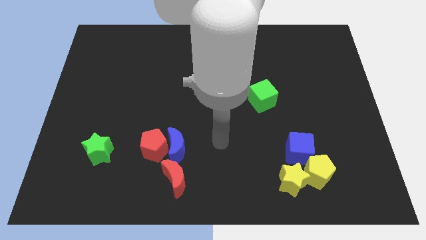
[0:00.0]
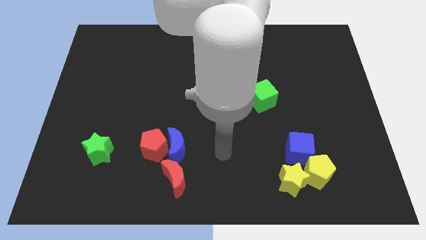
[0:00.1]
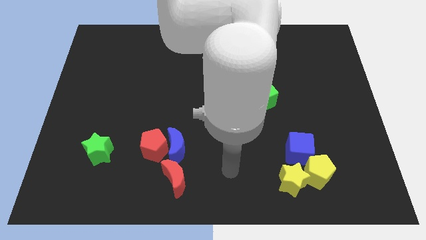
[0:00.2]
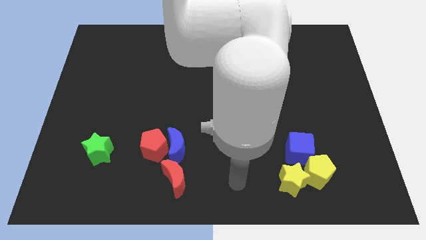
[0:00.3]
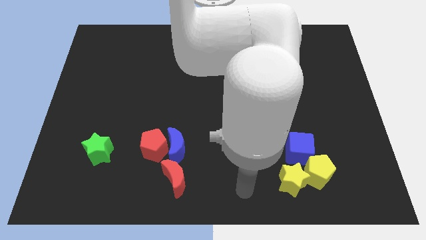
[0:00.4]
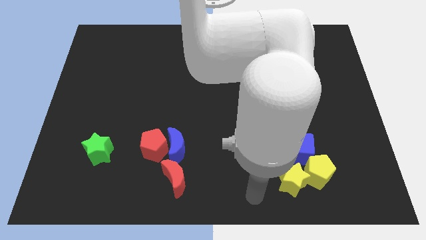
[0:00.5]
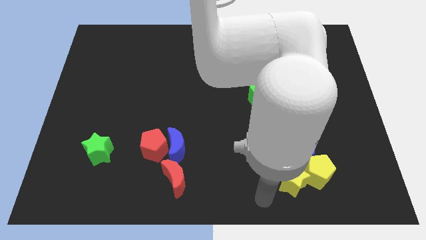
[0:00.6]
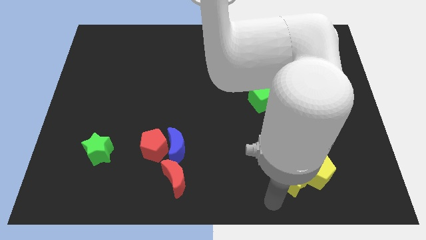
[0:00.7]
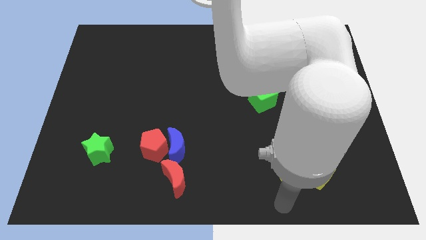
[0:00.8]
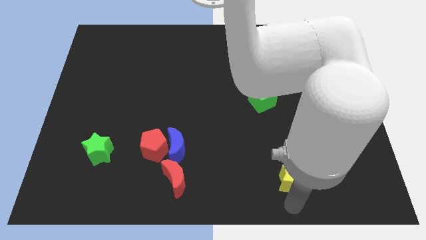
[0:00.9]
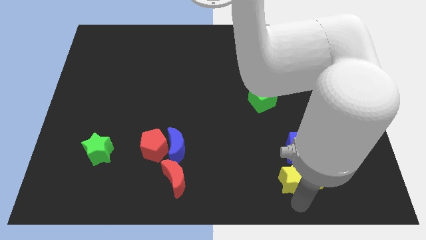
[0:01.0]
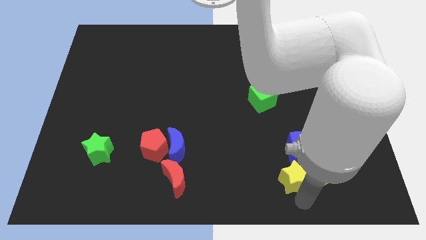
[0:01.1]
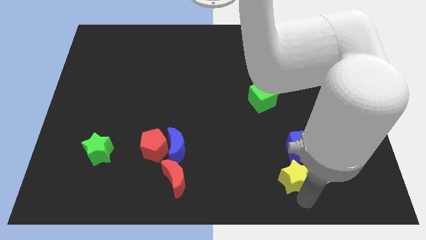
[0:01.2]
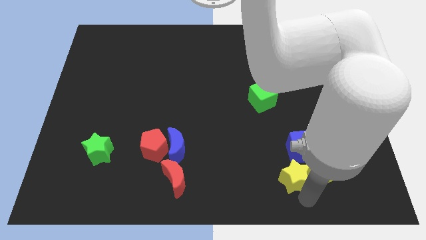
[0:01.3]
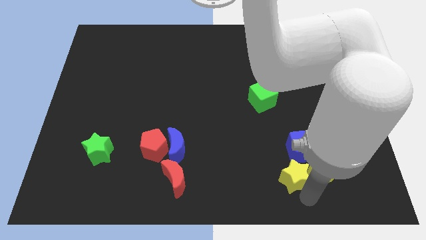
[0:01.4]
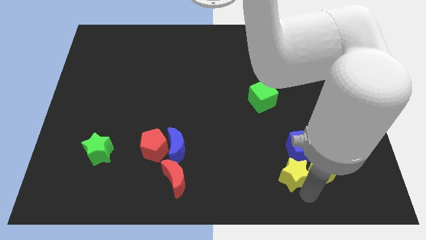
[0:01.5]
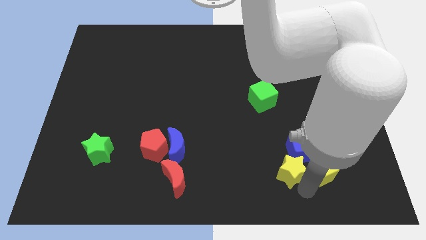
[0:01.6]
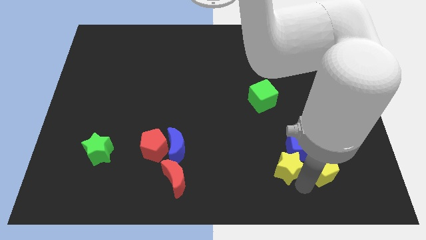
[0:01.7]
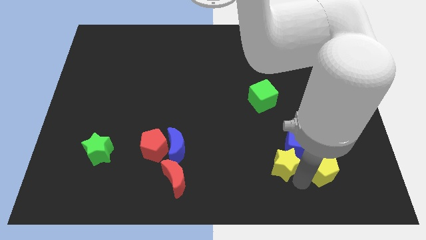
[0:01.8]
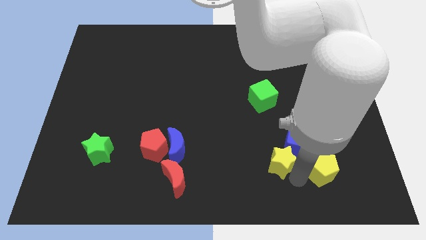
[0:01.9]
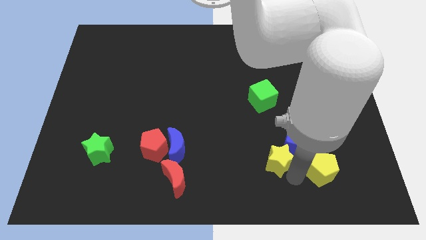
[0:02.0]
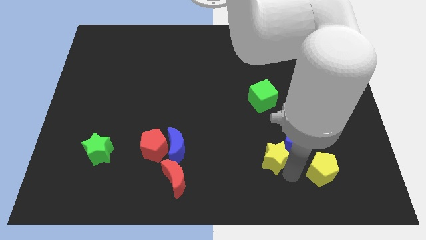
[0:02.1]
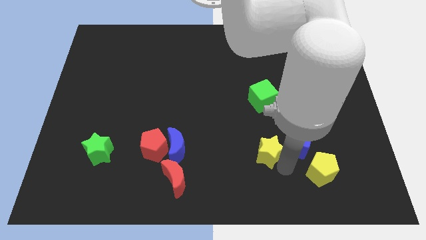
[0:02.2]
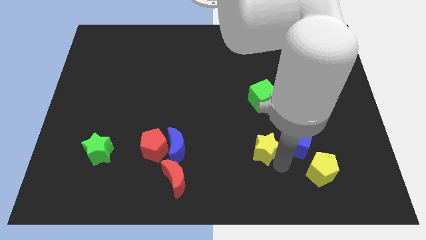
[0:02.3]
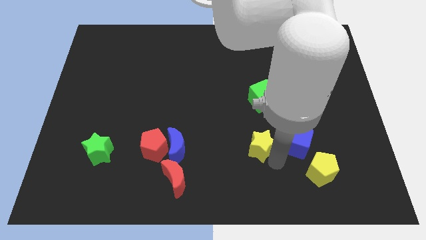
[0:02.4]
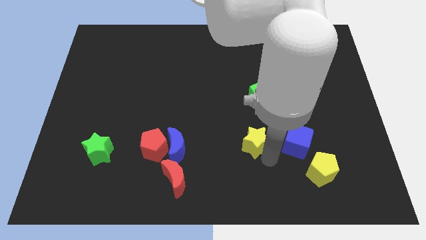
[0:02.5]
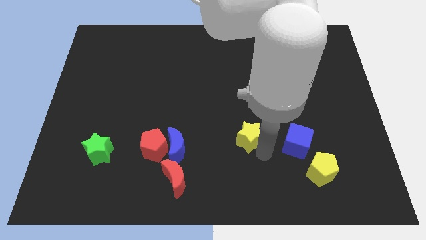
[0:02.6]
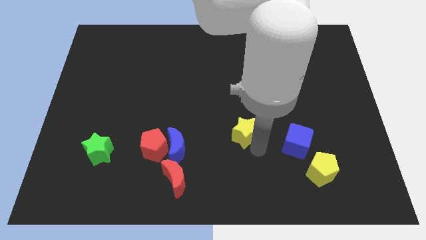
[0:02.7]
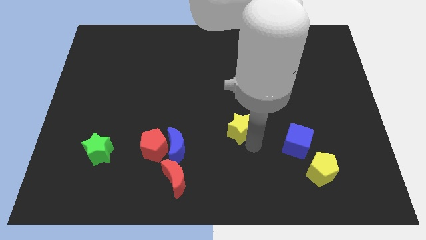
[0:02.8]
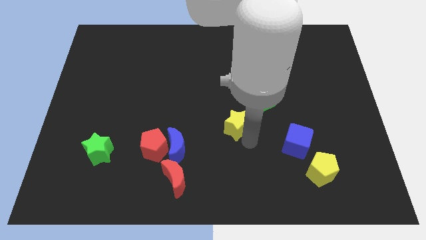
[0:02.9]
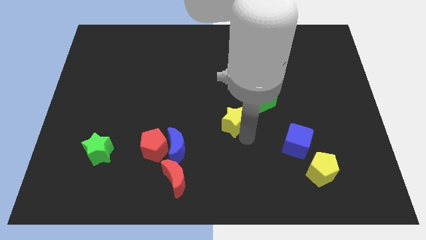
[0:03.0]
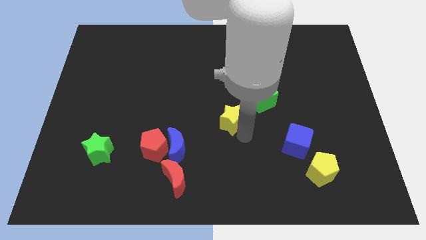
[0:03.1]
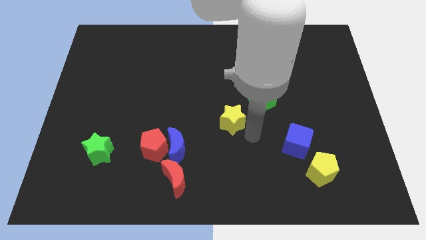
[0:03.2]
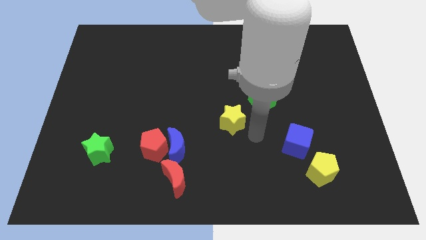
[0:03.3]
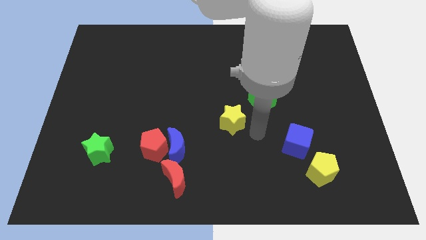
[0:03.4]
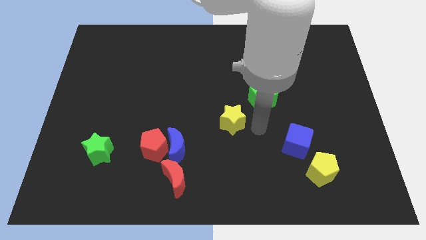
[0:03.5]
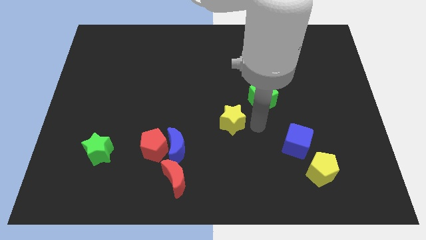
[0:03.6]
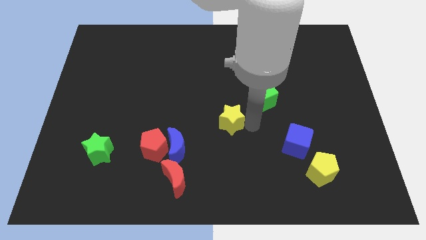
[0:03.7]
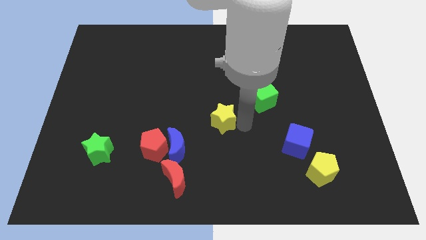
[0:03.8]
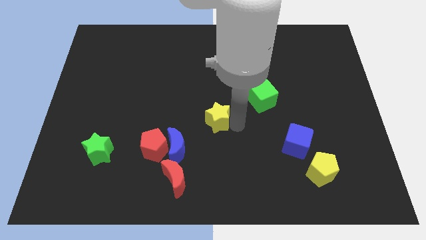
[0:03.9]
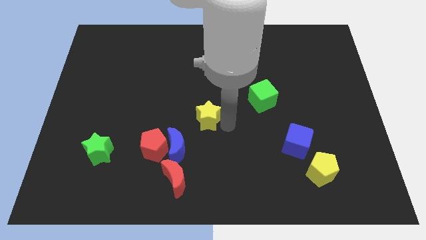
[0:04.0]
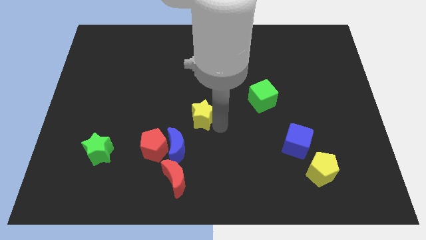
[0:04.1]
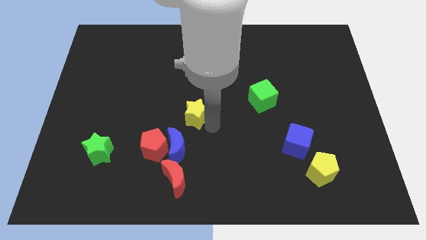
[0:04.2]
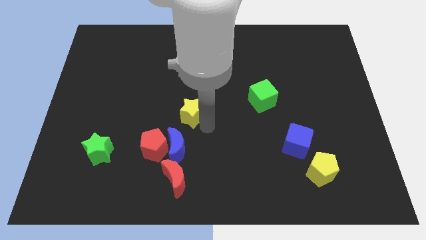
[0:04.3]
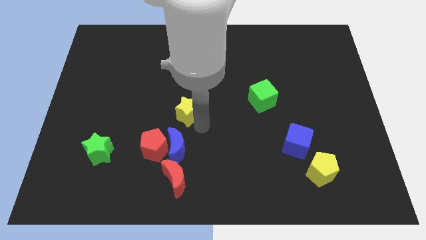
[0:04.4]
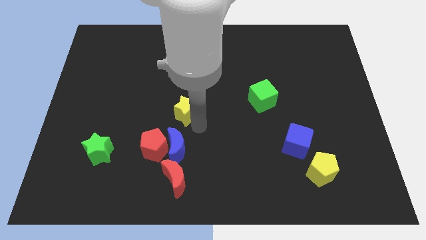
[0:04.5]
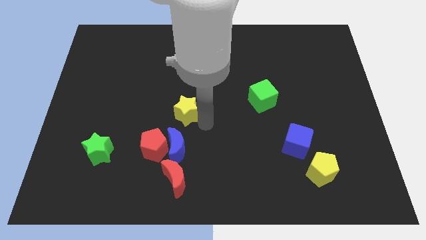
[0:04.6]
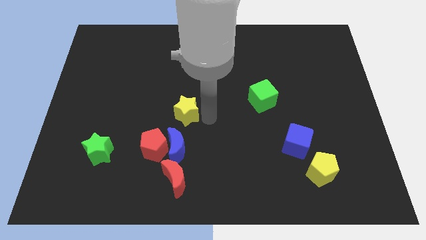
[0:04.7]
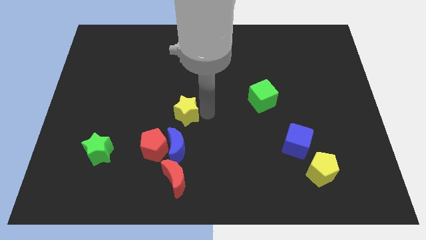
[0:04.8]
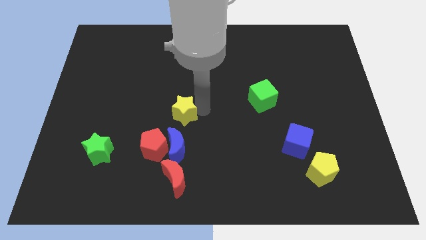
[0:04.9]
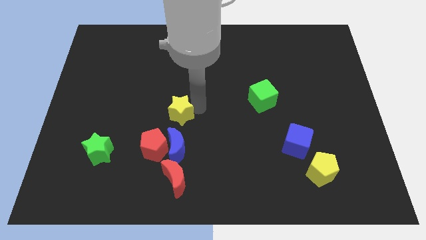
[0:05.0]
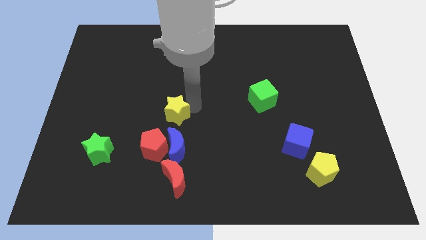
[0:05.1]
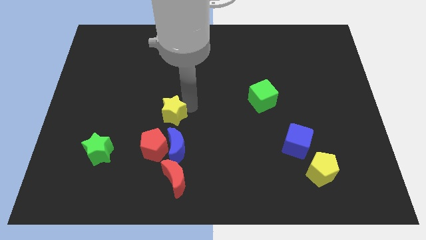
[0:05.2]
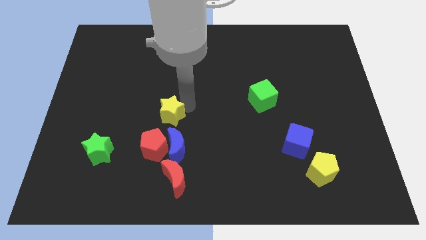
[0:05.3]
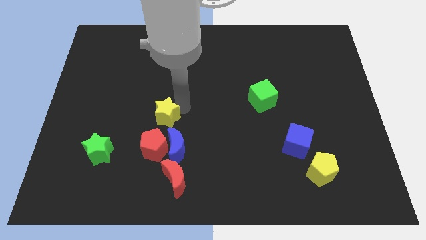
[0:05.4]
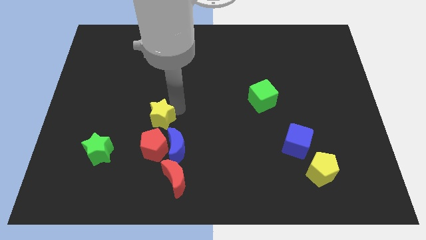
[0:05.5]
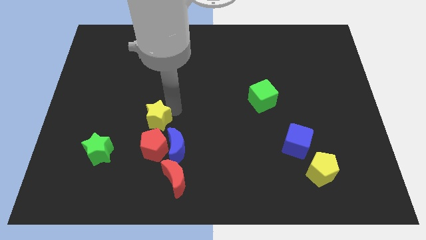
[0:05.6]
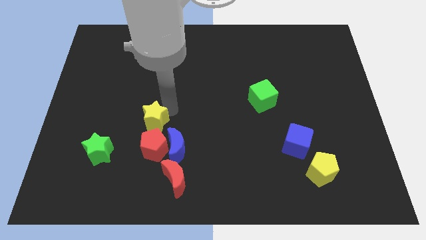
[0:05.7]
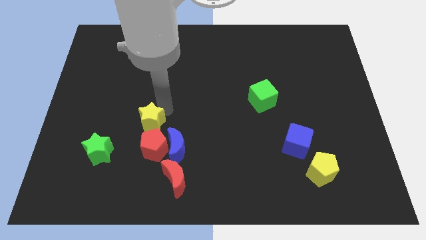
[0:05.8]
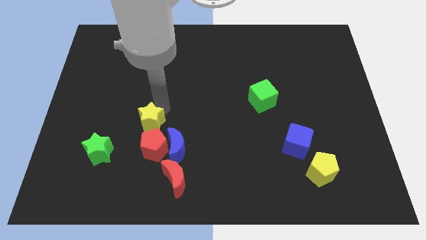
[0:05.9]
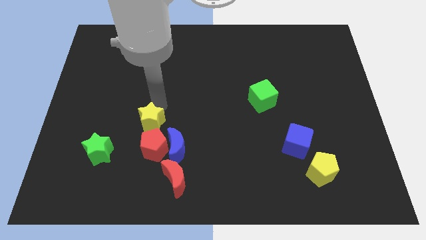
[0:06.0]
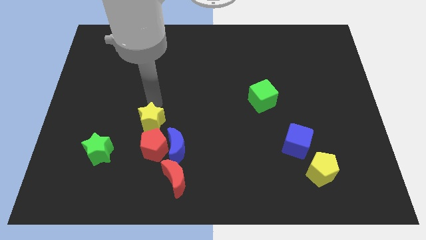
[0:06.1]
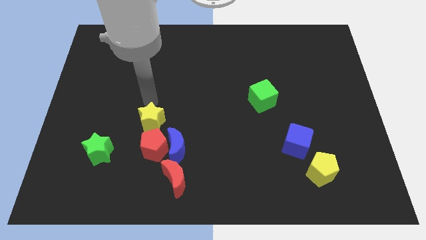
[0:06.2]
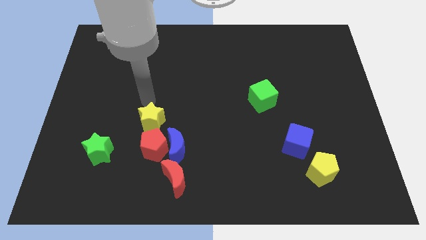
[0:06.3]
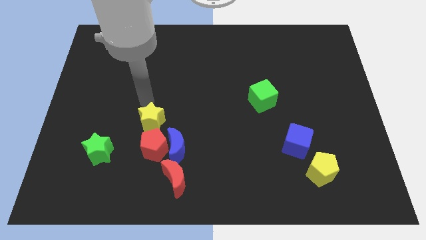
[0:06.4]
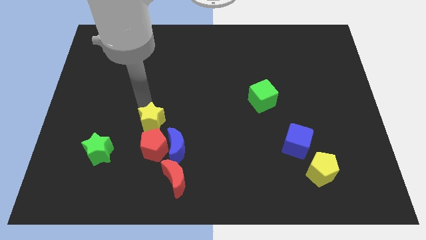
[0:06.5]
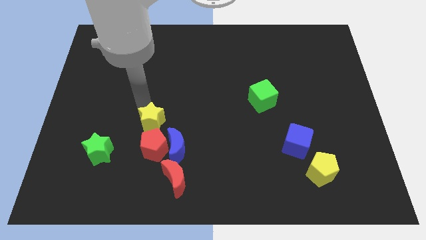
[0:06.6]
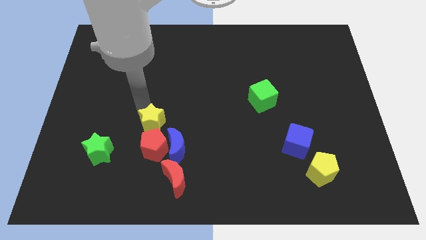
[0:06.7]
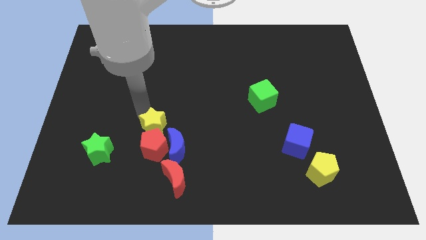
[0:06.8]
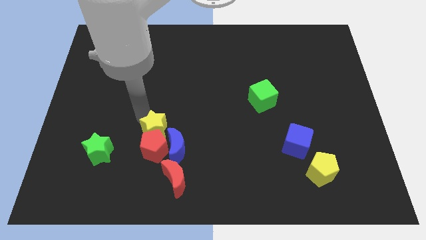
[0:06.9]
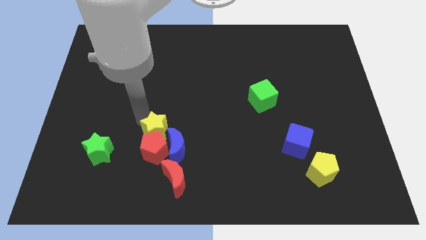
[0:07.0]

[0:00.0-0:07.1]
push the yellow star next to the red pentagon

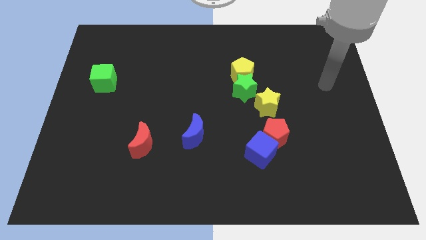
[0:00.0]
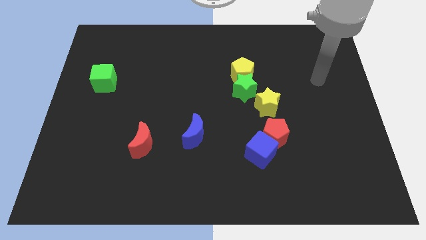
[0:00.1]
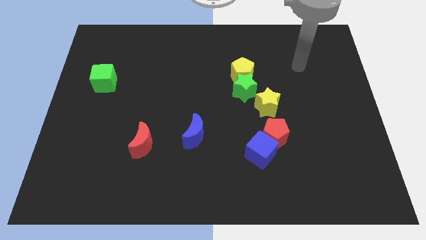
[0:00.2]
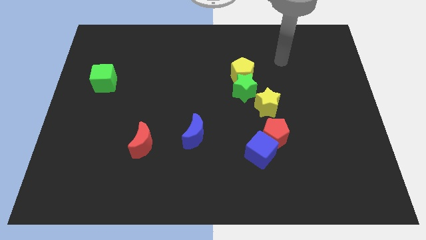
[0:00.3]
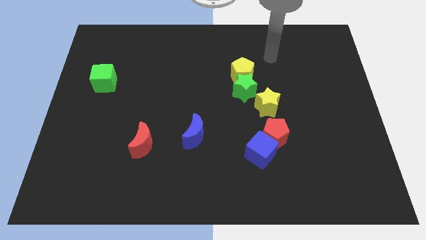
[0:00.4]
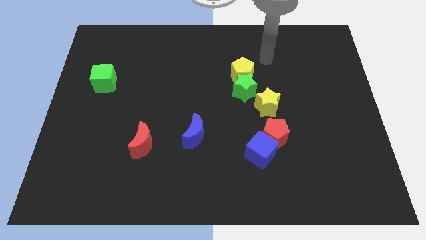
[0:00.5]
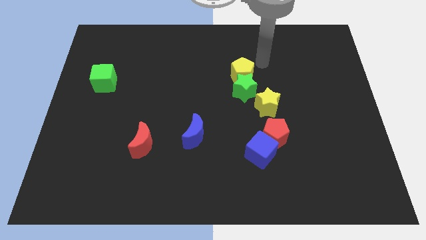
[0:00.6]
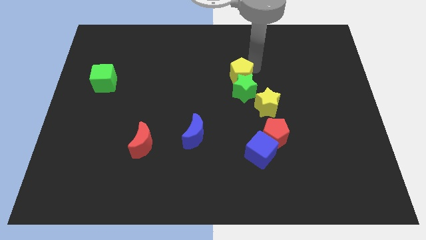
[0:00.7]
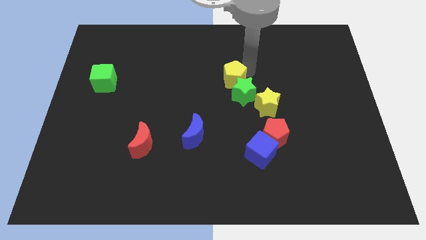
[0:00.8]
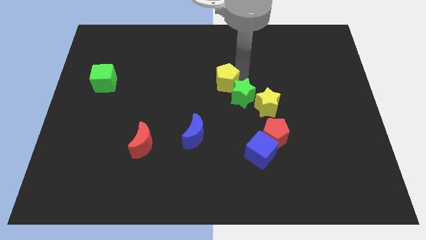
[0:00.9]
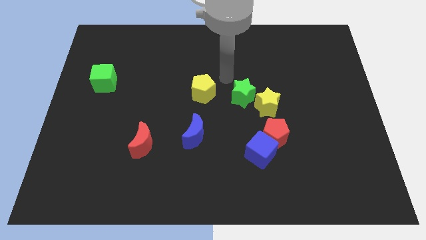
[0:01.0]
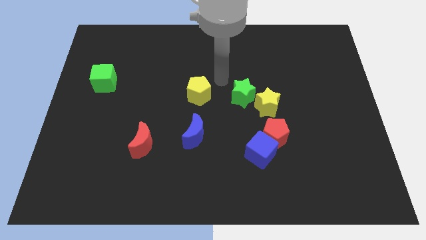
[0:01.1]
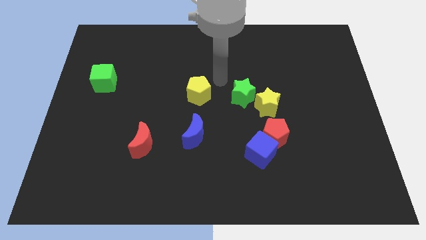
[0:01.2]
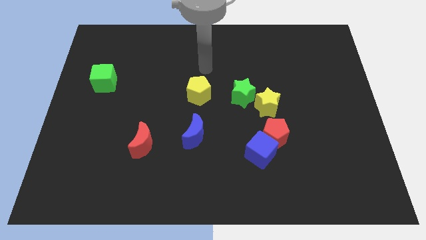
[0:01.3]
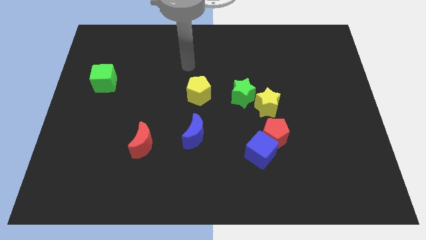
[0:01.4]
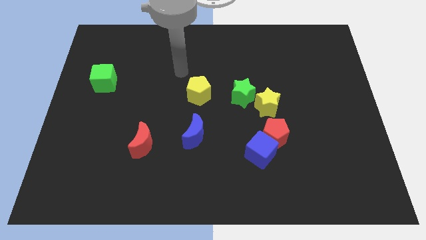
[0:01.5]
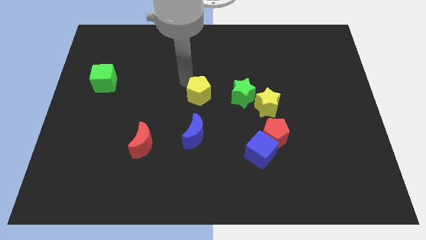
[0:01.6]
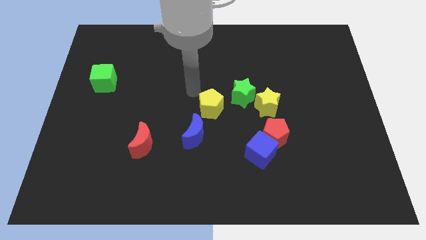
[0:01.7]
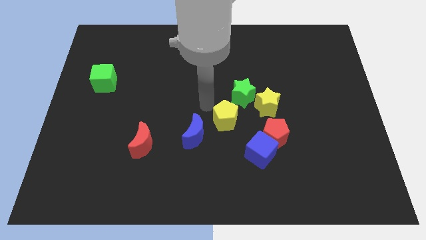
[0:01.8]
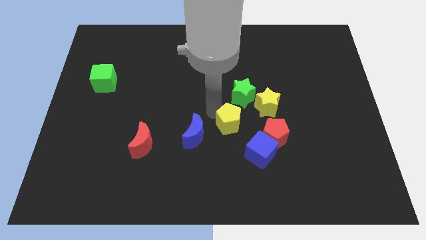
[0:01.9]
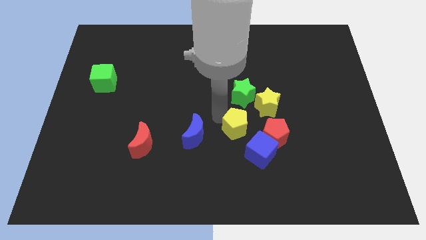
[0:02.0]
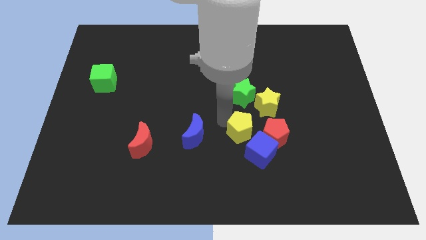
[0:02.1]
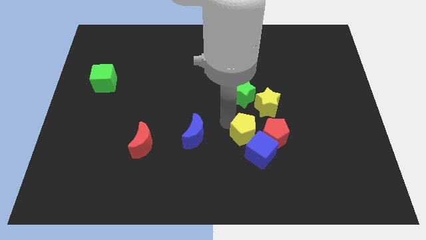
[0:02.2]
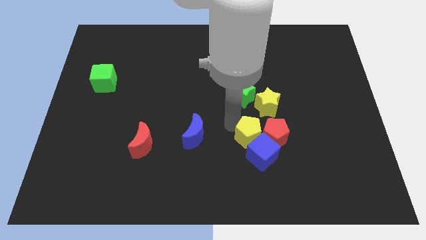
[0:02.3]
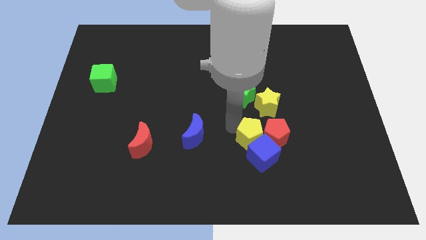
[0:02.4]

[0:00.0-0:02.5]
move the yellow pentagon towards the blue cube
